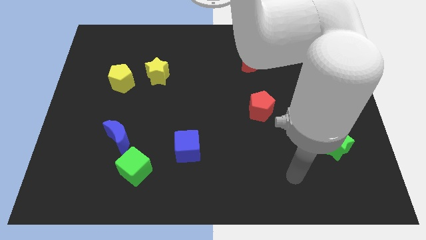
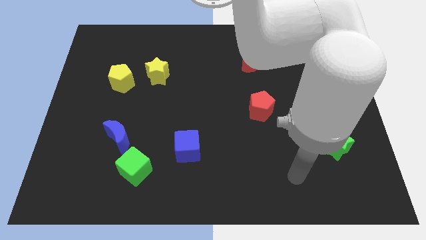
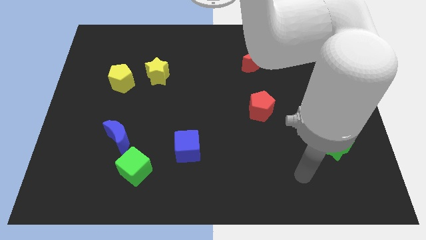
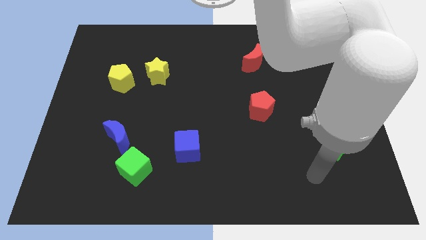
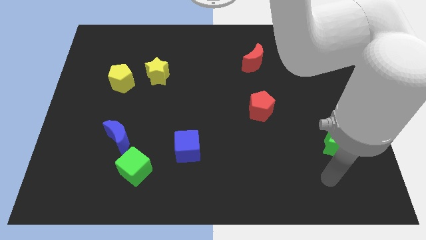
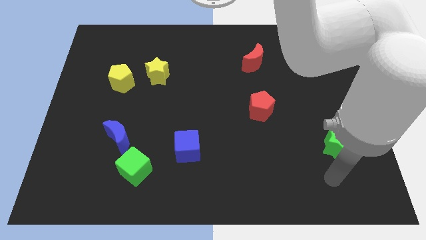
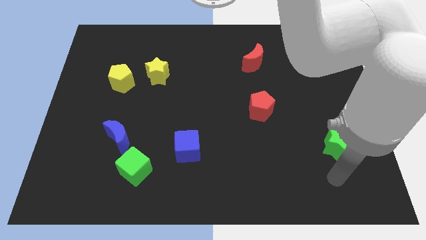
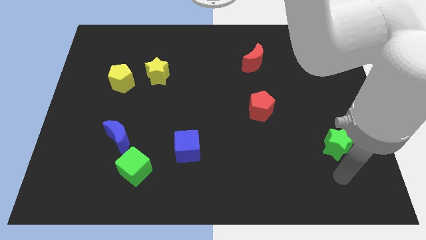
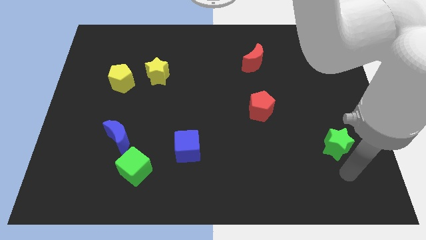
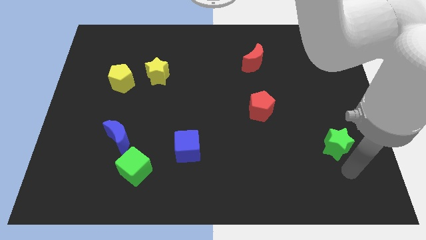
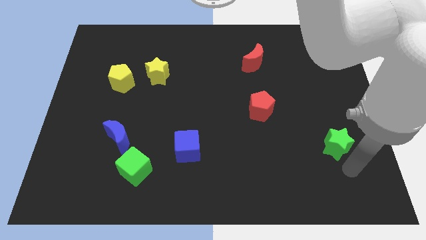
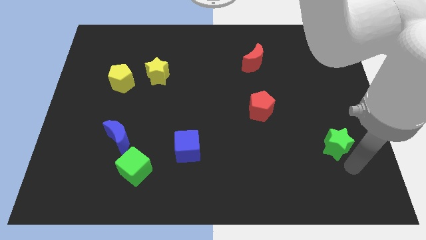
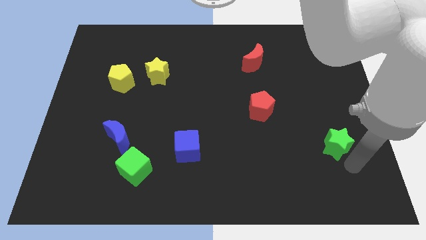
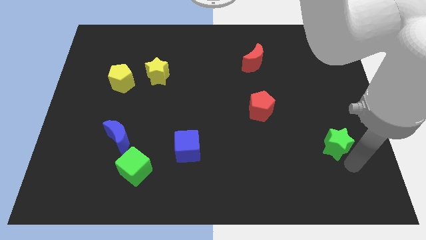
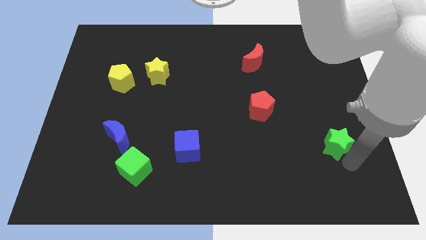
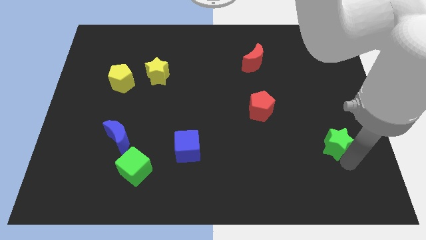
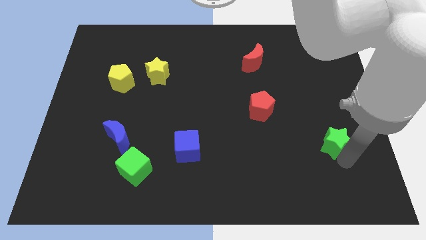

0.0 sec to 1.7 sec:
move the arm towards the green star

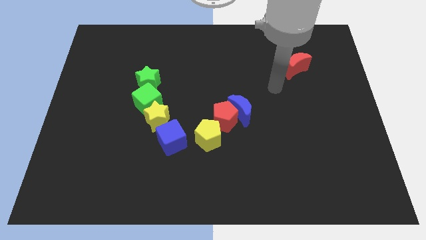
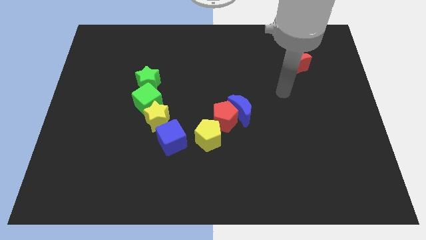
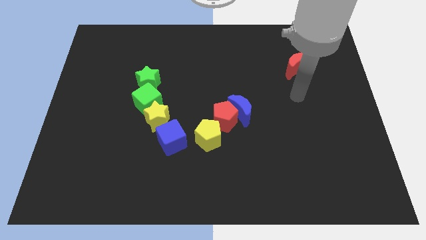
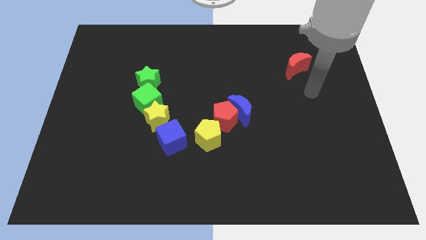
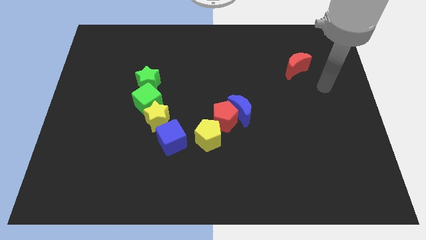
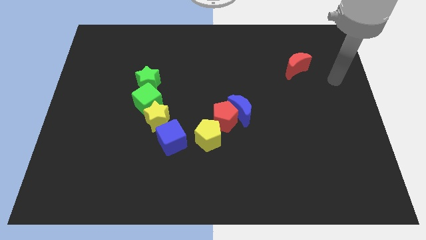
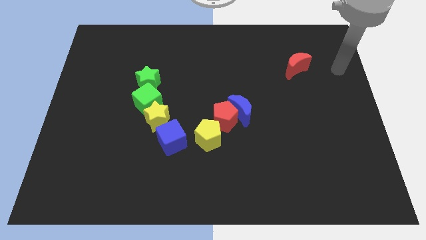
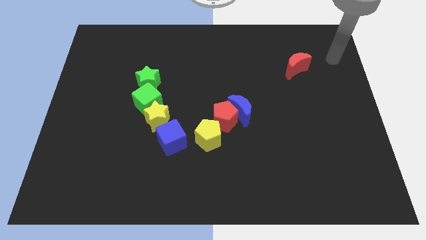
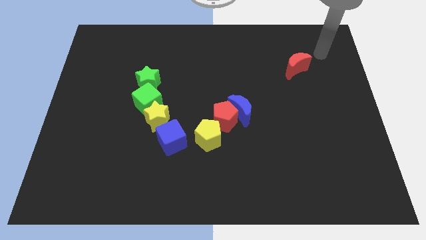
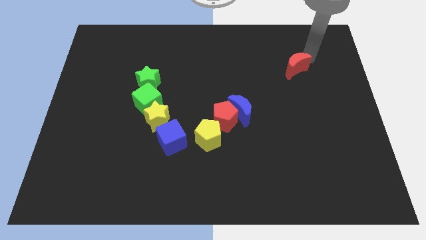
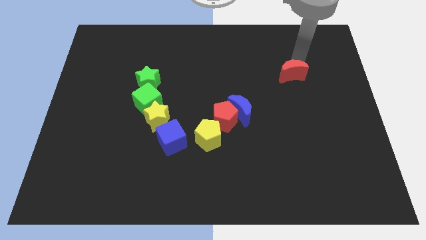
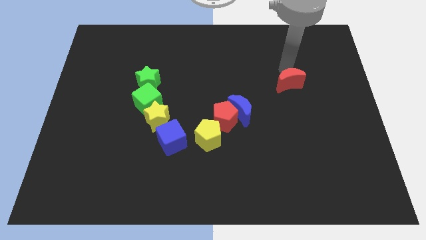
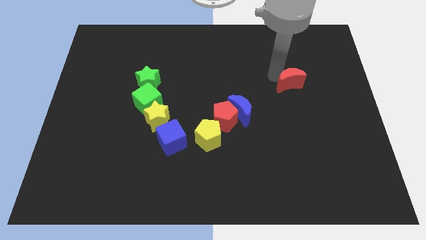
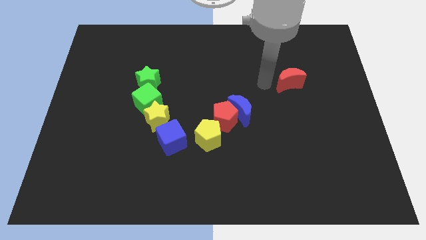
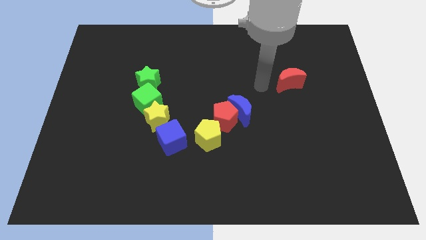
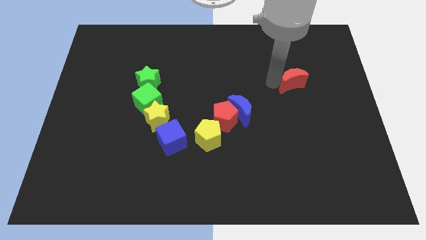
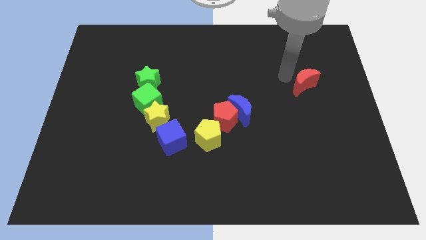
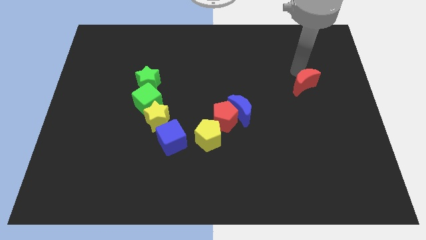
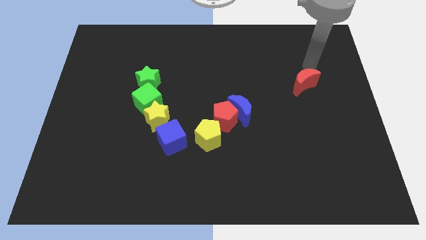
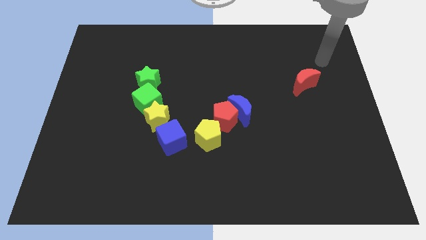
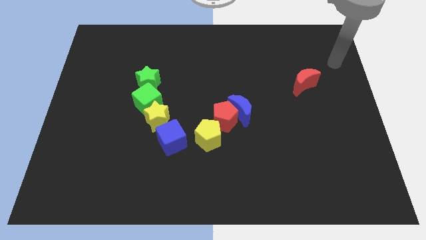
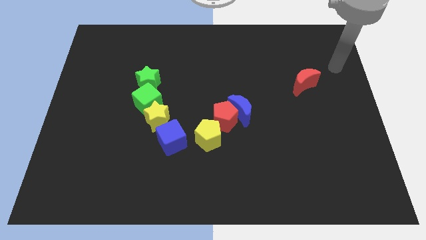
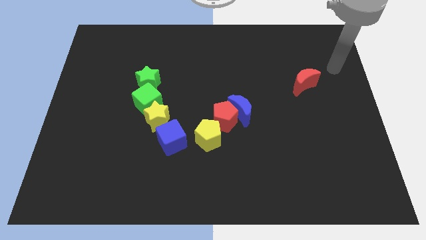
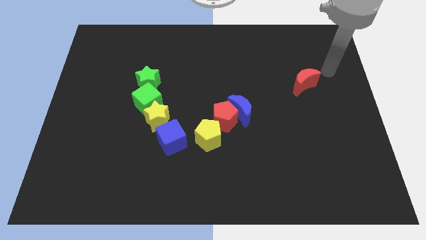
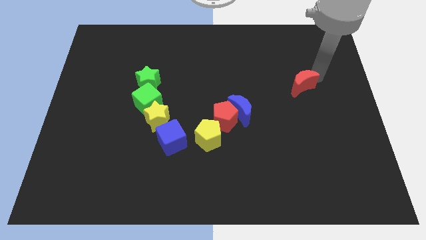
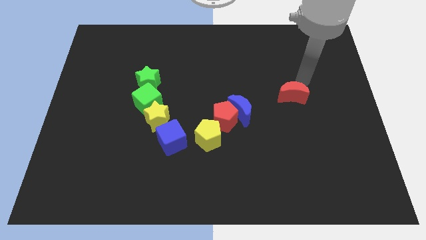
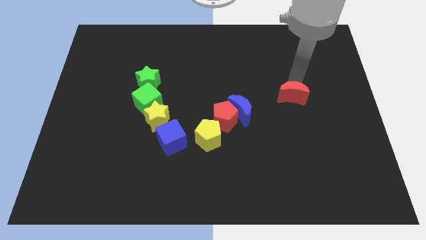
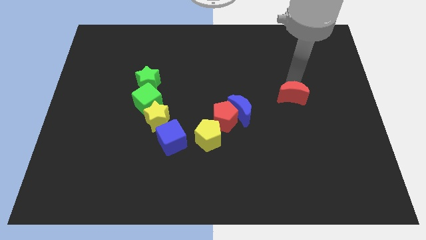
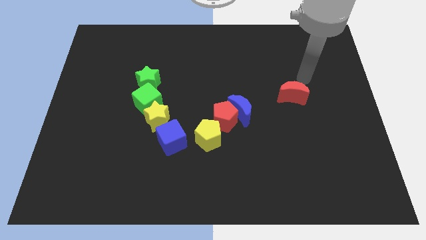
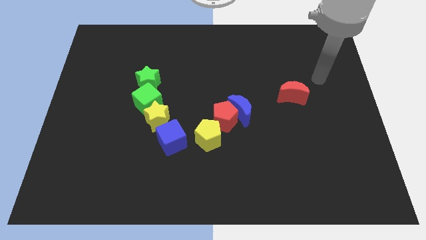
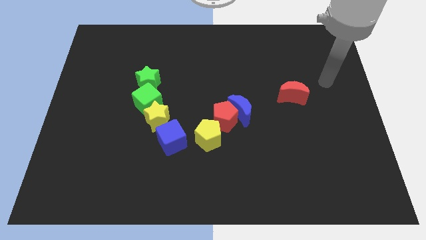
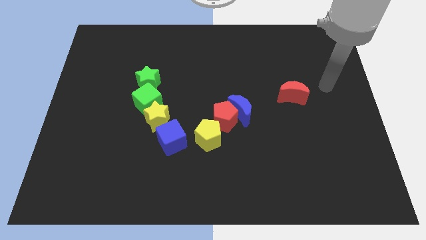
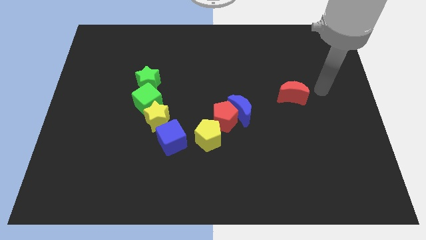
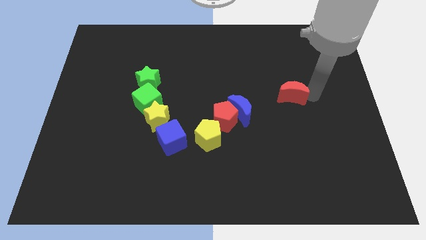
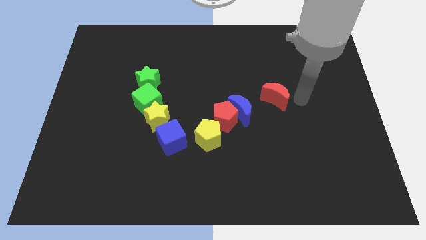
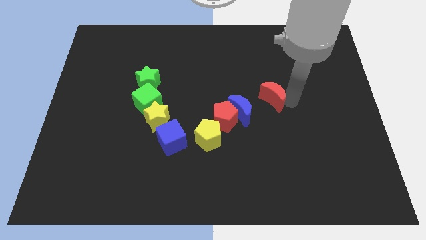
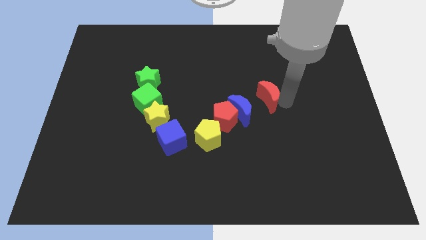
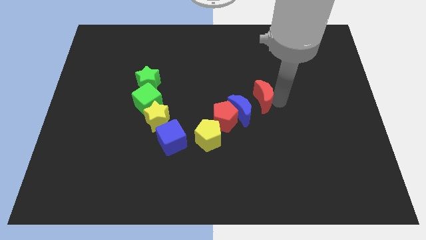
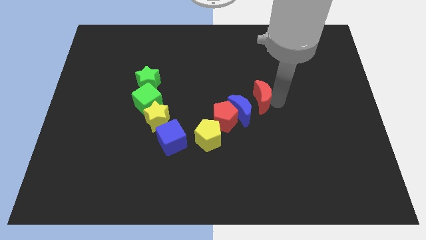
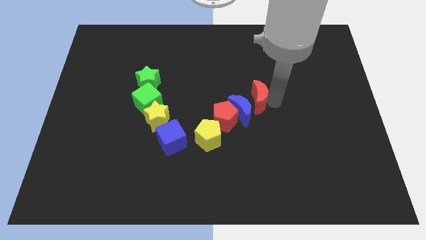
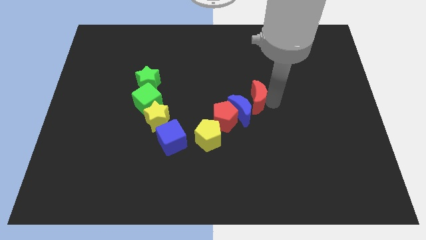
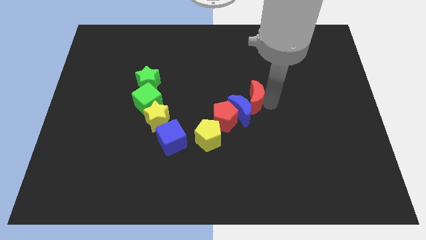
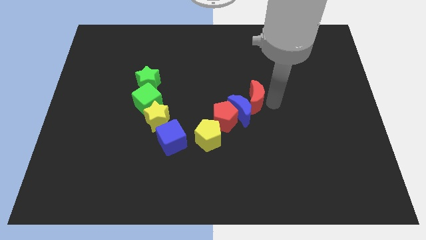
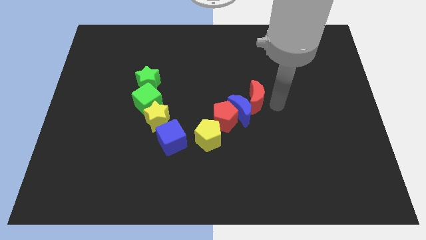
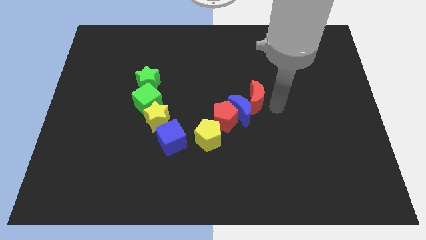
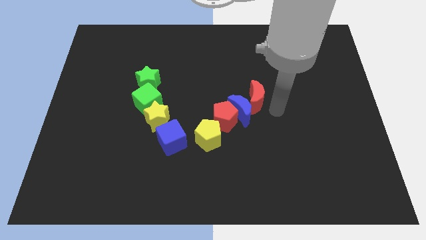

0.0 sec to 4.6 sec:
move the red crescent right to the blue crescent

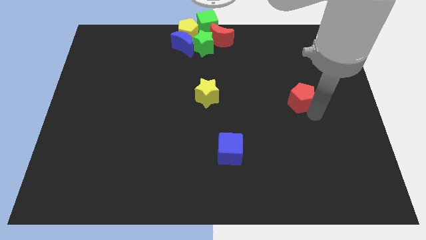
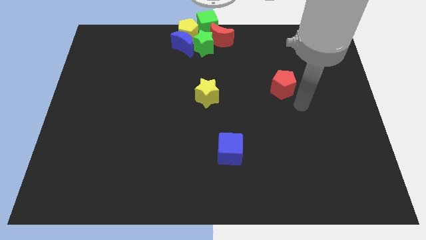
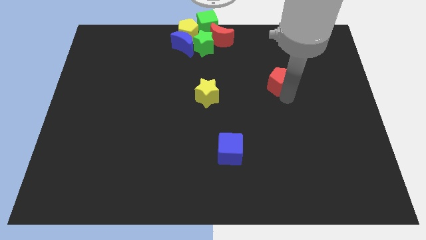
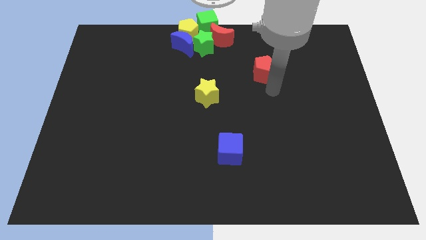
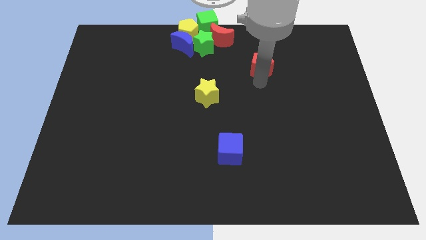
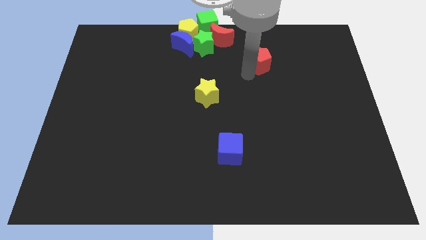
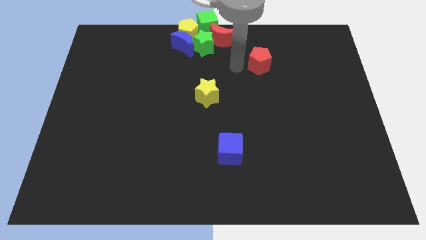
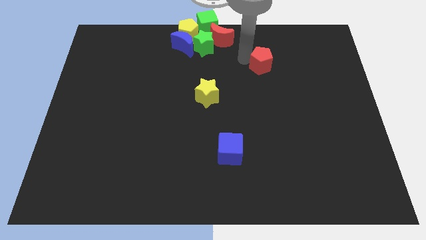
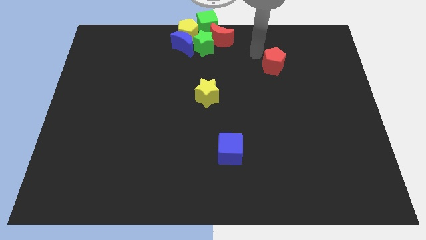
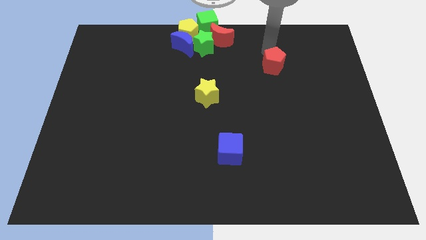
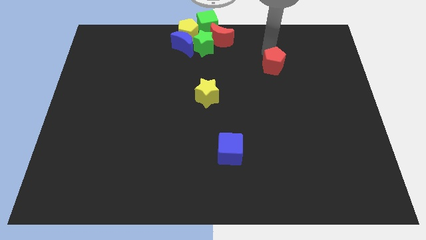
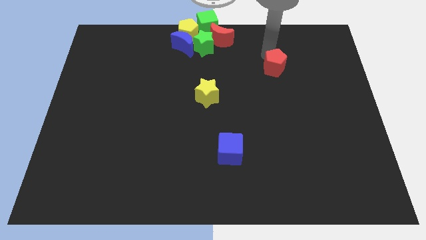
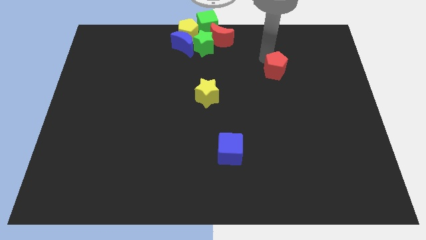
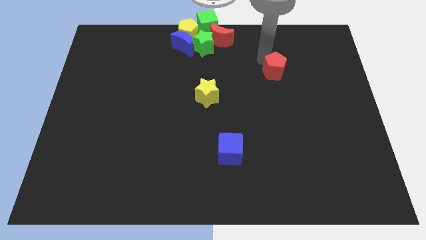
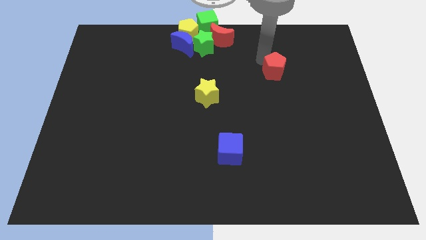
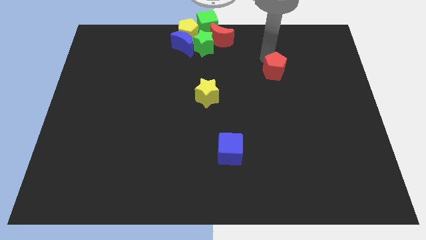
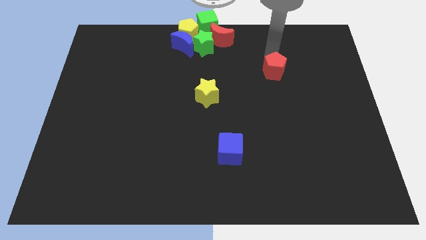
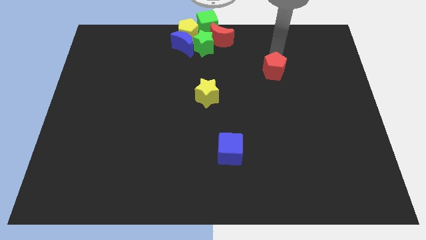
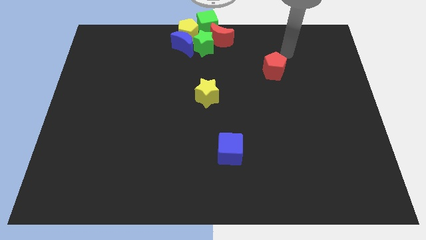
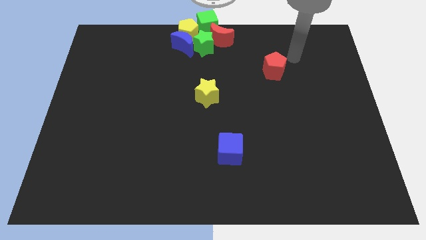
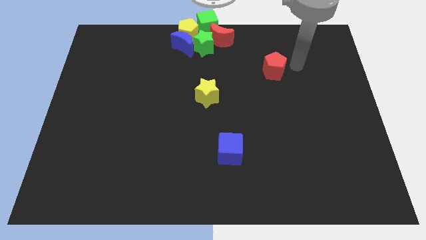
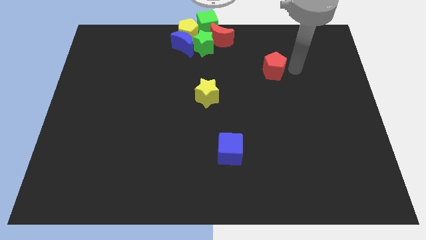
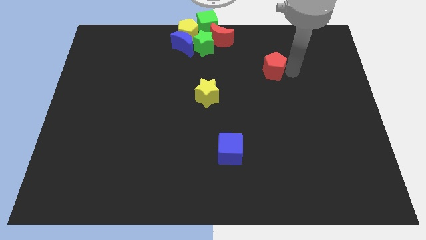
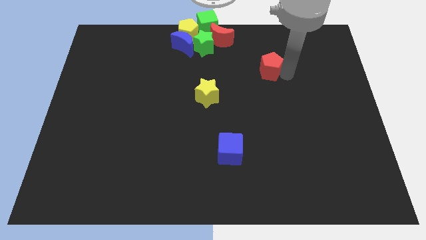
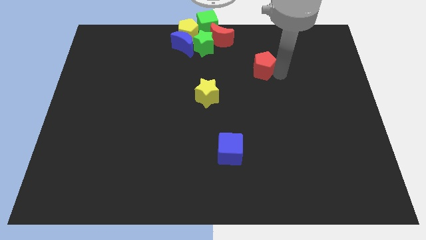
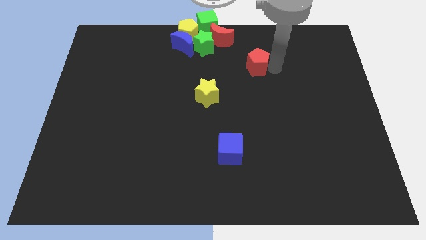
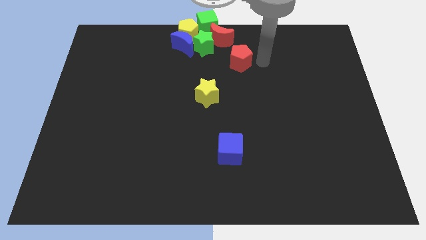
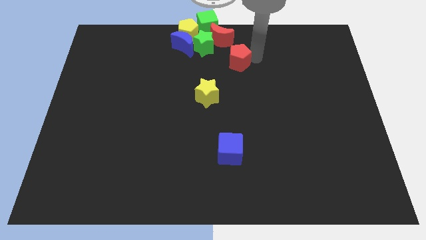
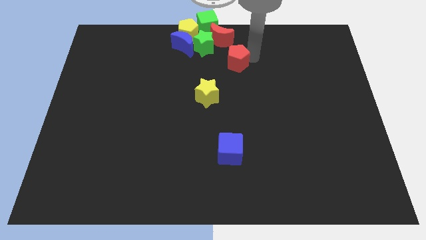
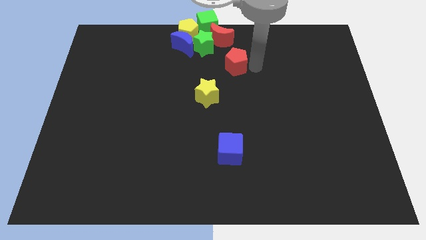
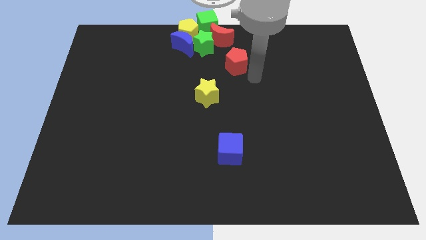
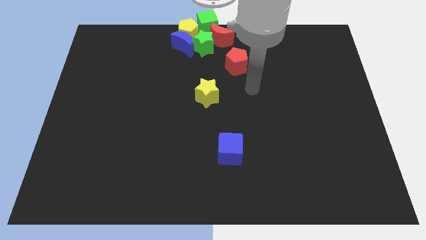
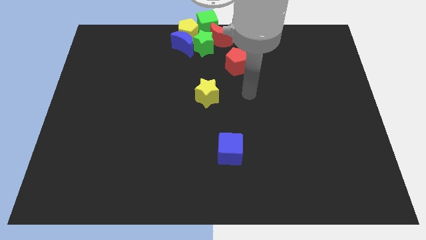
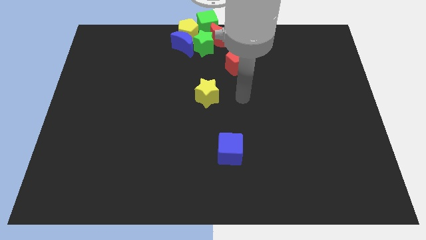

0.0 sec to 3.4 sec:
place the red pentagon to the bottom of the red crescent
